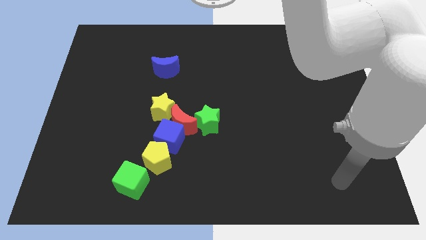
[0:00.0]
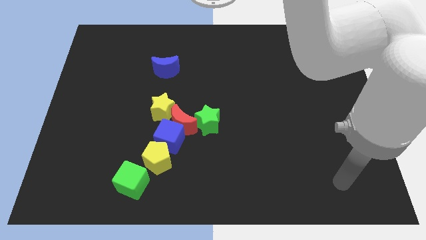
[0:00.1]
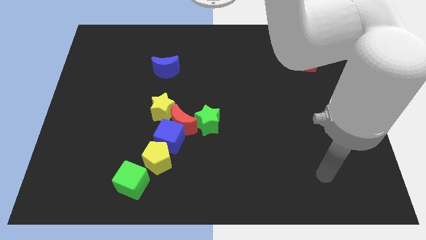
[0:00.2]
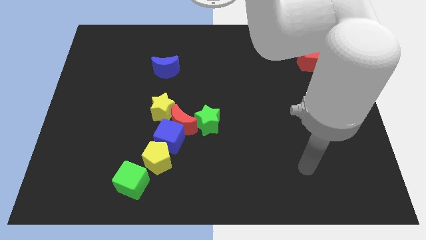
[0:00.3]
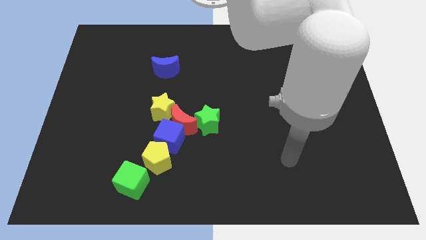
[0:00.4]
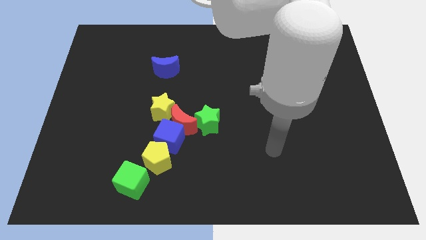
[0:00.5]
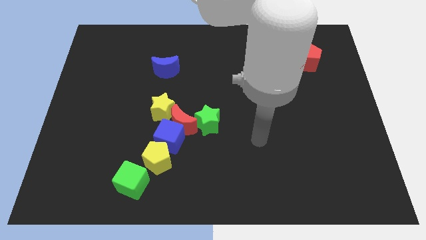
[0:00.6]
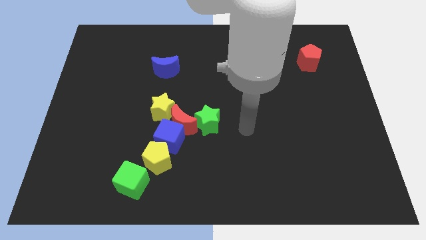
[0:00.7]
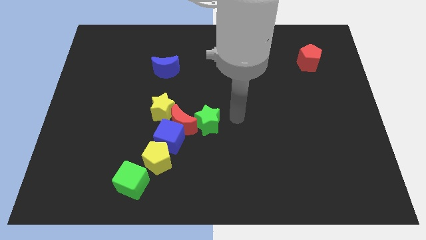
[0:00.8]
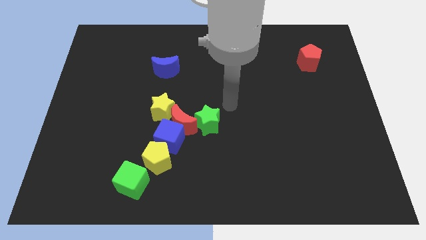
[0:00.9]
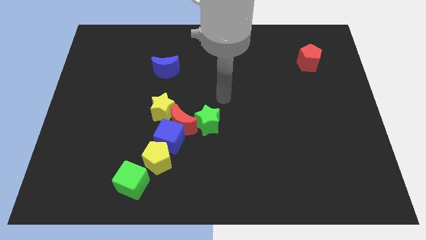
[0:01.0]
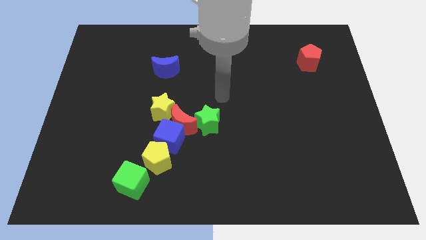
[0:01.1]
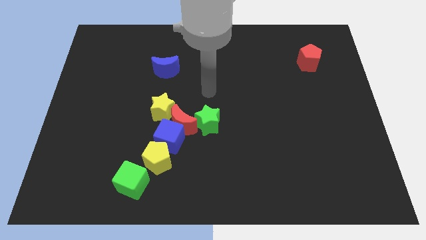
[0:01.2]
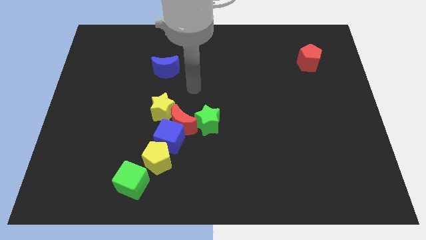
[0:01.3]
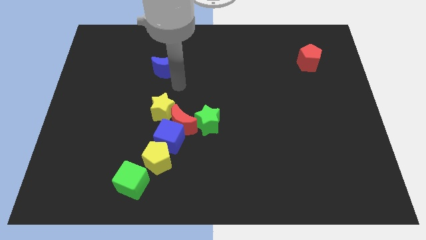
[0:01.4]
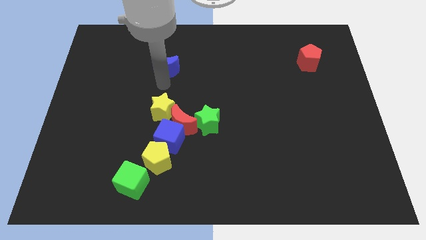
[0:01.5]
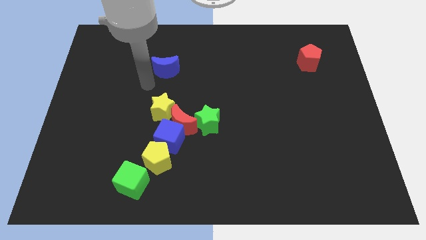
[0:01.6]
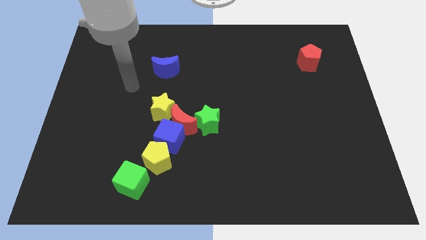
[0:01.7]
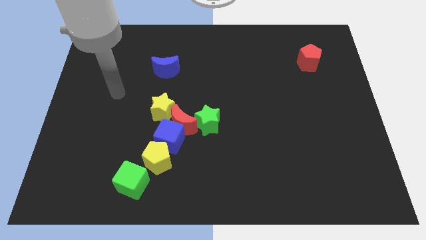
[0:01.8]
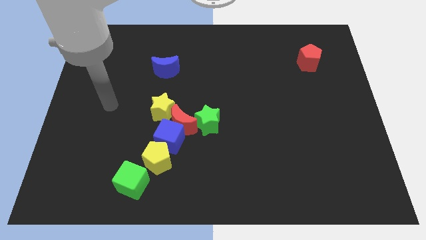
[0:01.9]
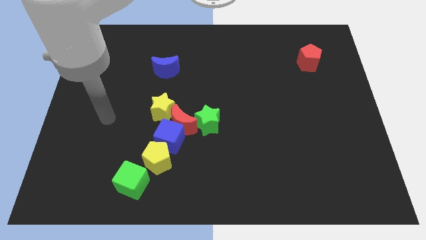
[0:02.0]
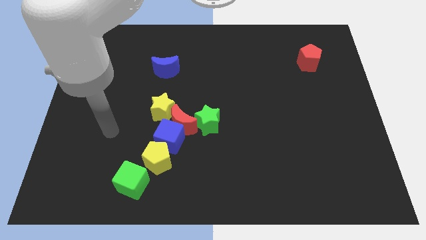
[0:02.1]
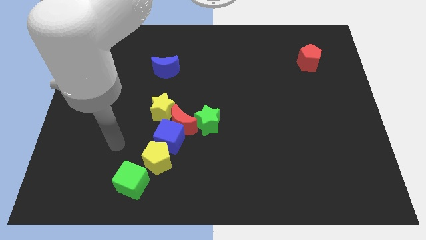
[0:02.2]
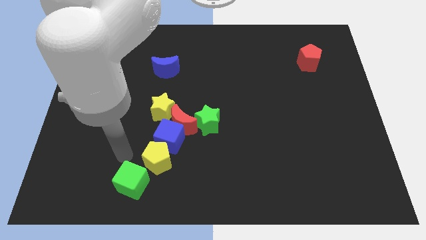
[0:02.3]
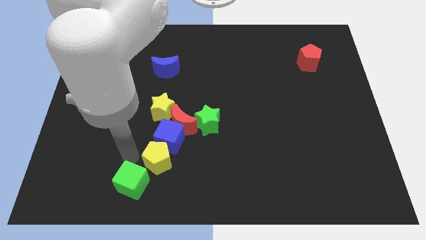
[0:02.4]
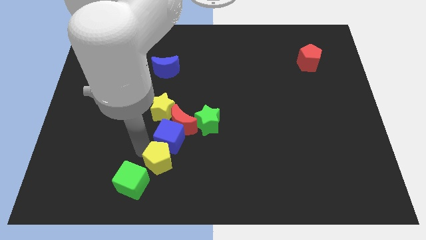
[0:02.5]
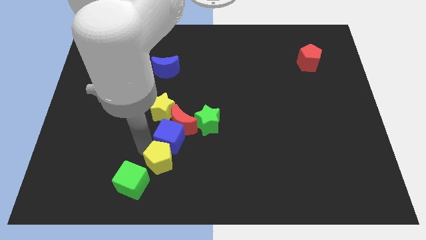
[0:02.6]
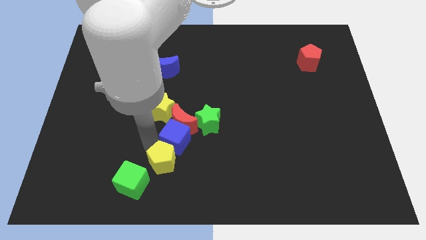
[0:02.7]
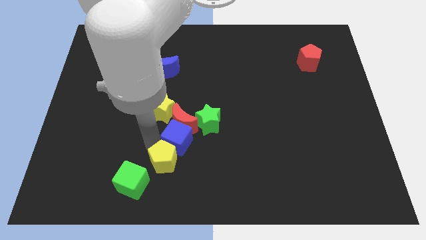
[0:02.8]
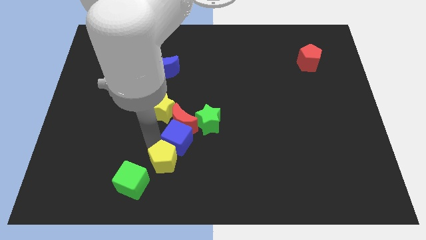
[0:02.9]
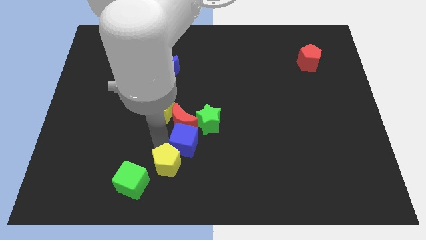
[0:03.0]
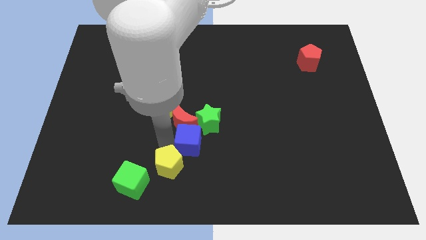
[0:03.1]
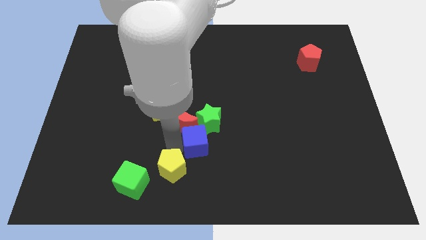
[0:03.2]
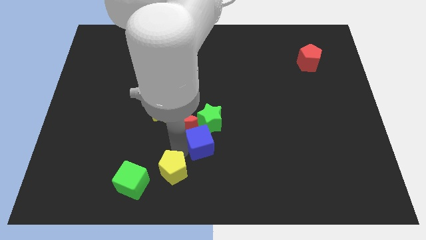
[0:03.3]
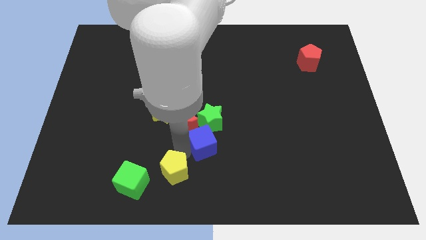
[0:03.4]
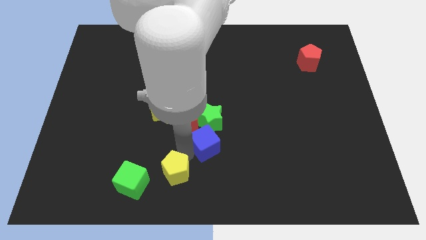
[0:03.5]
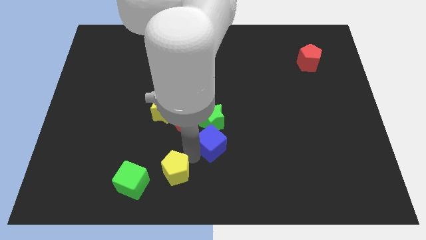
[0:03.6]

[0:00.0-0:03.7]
place blue cube to the bottom of green star

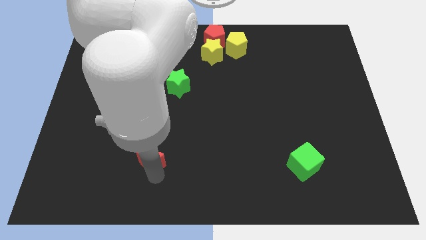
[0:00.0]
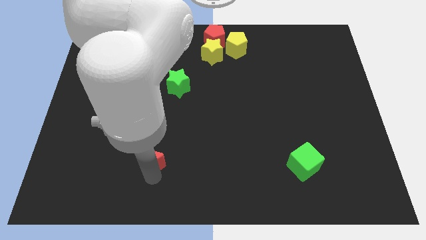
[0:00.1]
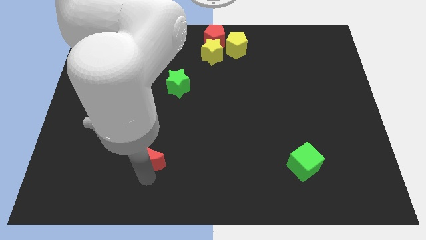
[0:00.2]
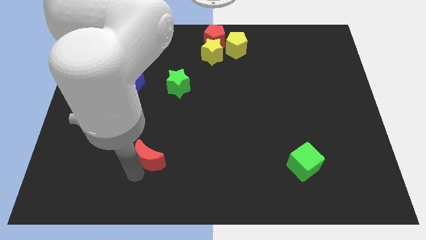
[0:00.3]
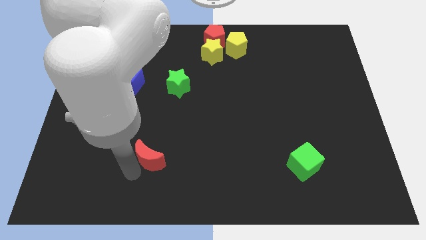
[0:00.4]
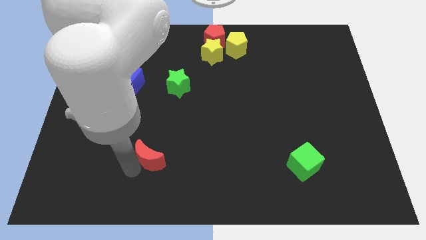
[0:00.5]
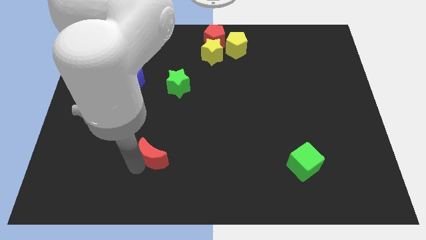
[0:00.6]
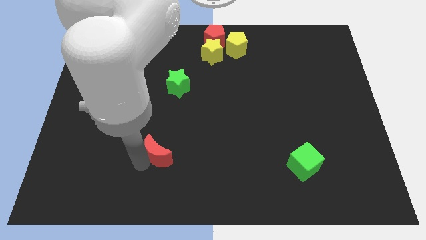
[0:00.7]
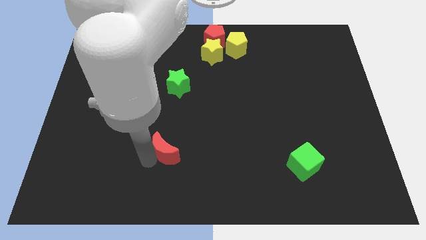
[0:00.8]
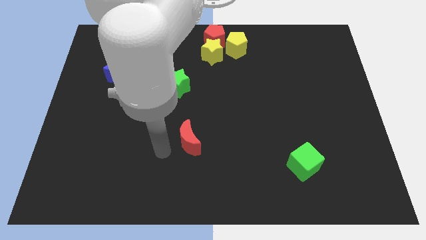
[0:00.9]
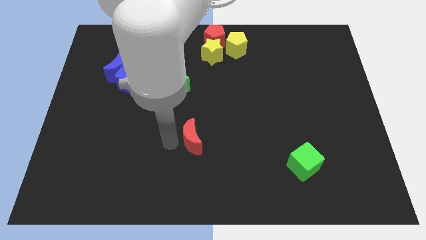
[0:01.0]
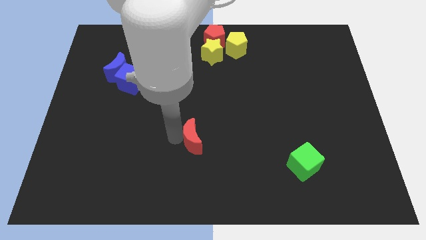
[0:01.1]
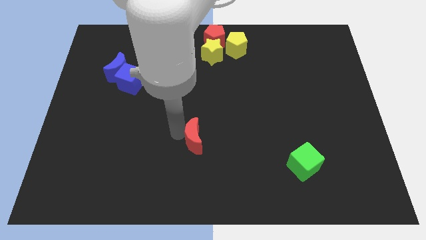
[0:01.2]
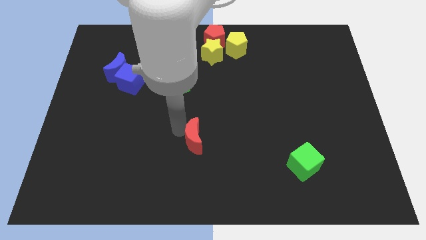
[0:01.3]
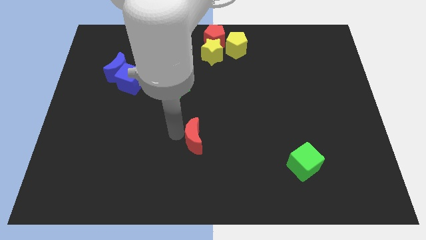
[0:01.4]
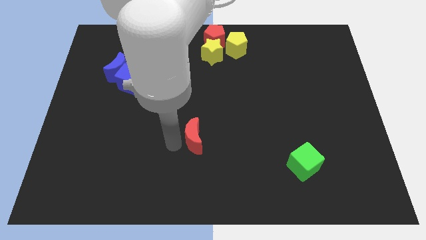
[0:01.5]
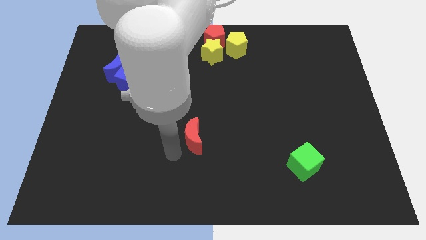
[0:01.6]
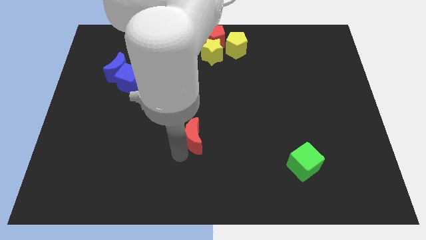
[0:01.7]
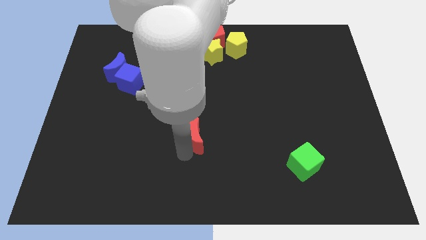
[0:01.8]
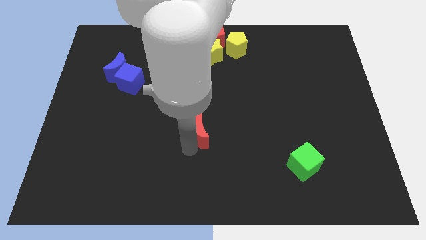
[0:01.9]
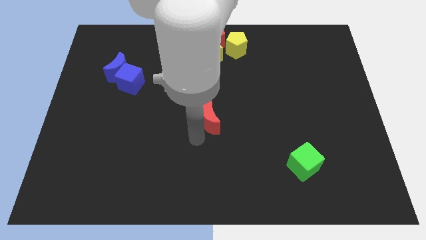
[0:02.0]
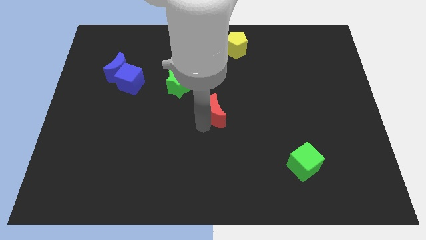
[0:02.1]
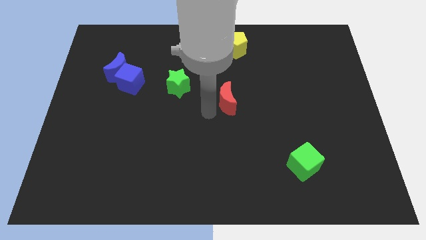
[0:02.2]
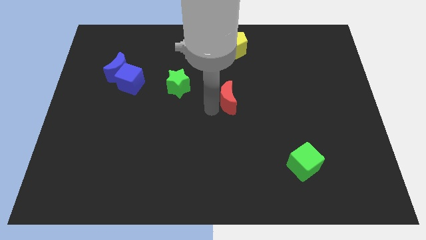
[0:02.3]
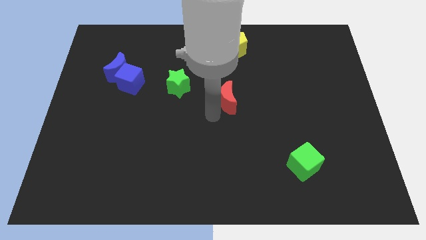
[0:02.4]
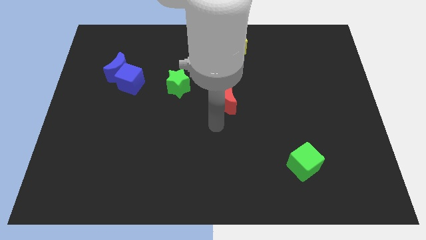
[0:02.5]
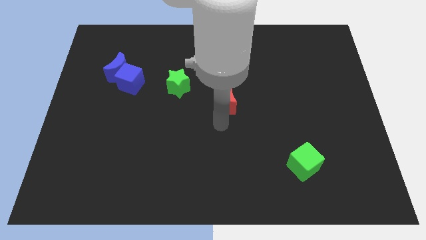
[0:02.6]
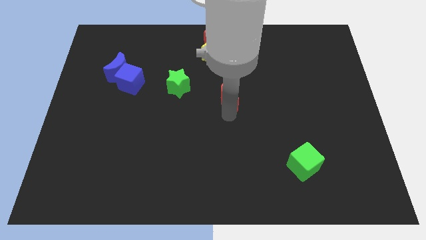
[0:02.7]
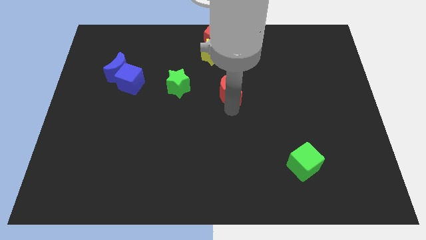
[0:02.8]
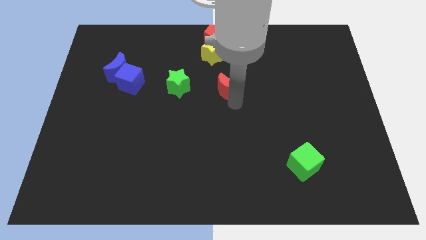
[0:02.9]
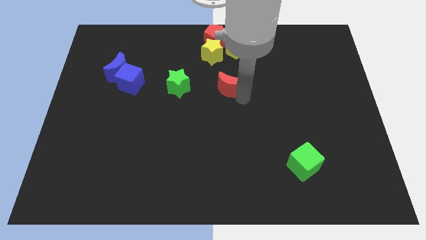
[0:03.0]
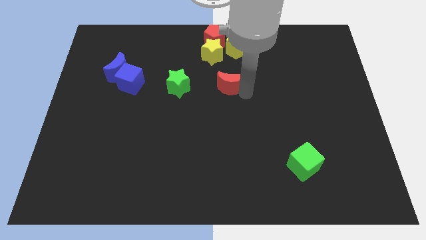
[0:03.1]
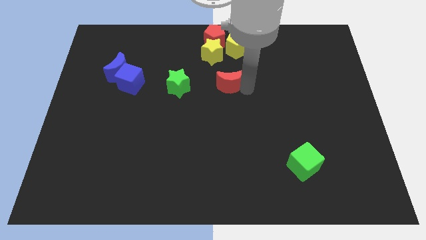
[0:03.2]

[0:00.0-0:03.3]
put the red moon diagonal to the right of the green star

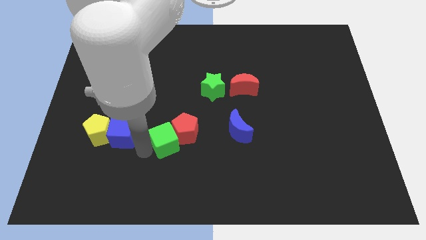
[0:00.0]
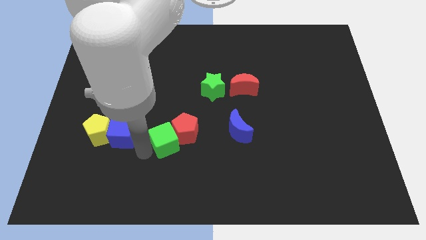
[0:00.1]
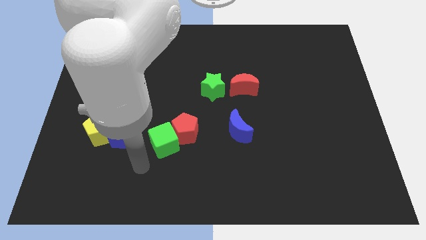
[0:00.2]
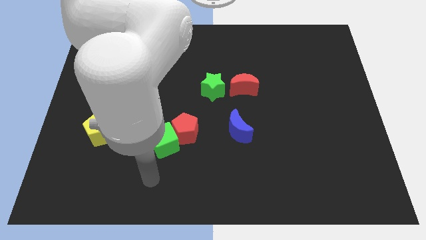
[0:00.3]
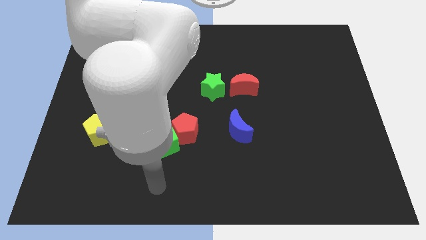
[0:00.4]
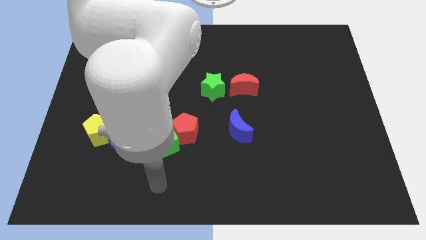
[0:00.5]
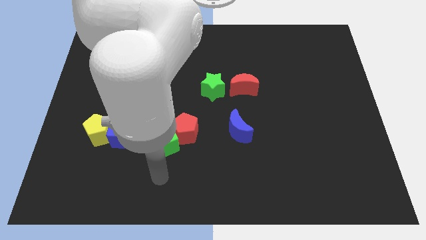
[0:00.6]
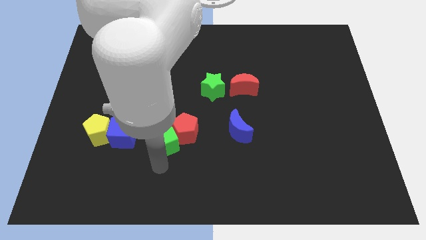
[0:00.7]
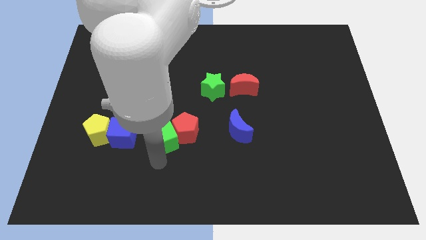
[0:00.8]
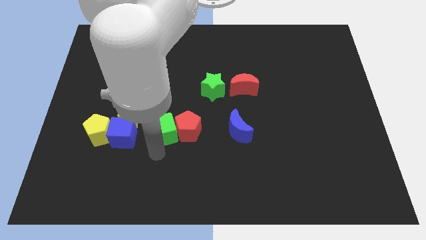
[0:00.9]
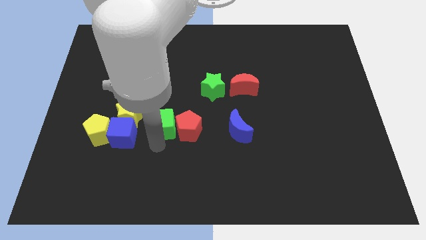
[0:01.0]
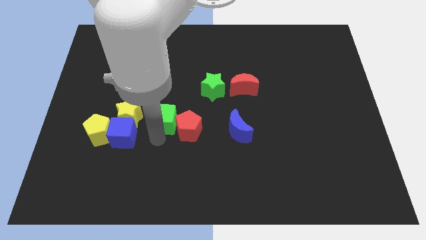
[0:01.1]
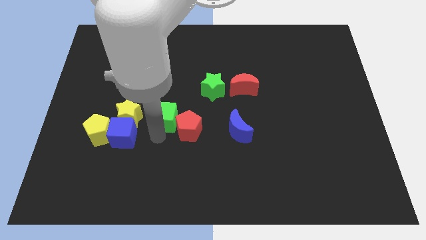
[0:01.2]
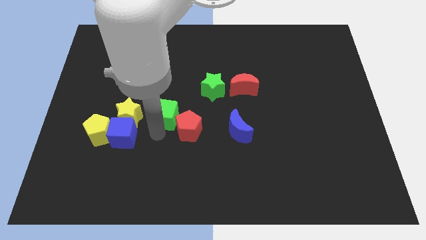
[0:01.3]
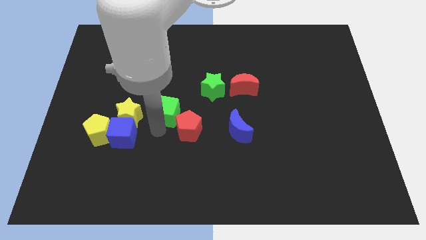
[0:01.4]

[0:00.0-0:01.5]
place the green cube at the right side of the yellow star

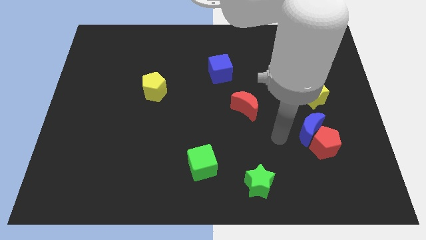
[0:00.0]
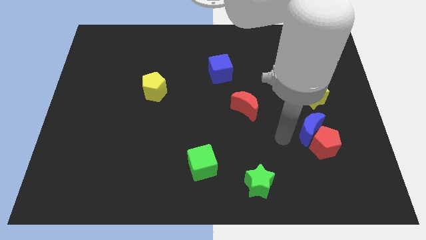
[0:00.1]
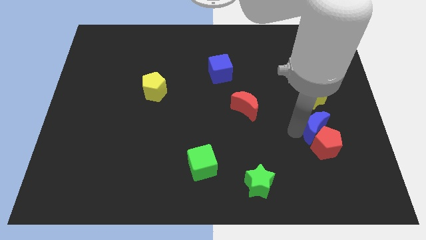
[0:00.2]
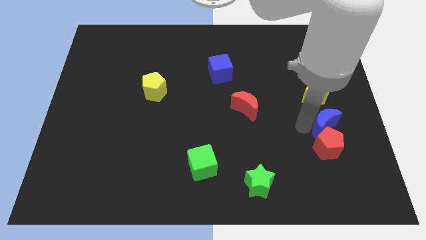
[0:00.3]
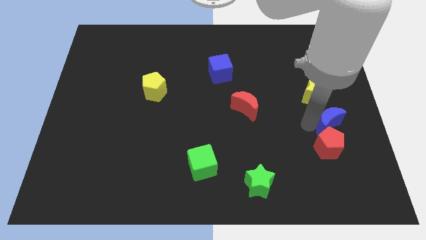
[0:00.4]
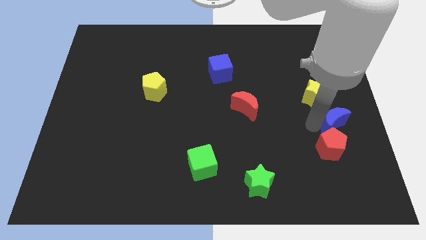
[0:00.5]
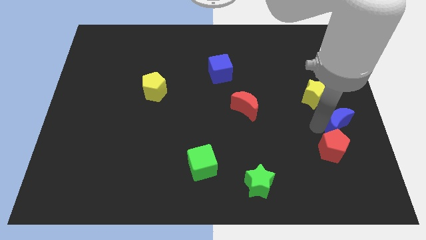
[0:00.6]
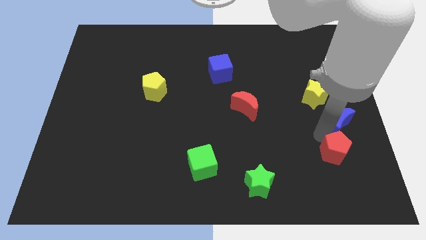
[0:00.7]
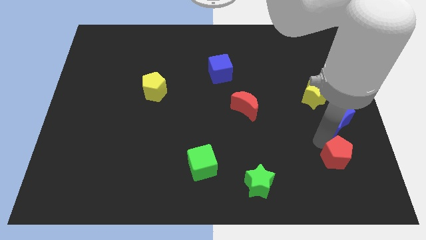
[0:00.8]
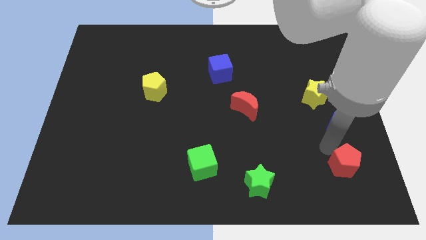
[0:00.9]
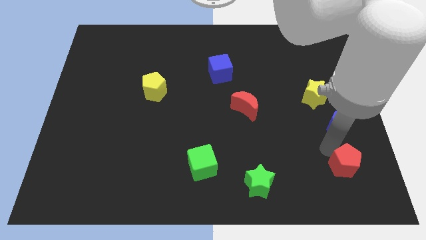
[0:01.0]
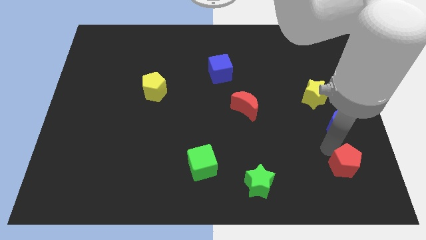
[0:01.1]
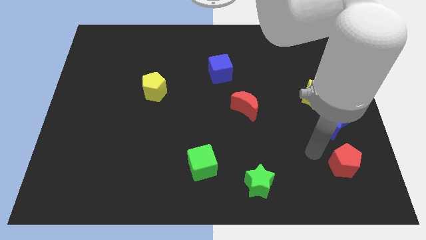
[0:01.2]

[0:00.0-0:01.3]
push red pentagon and blue moon towards the right side of the board
